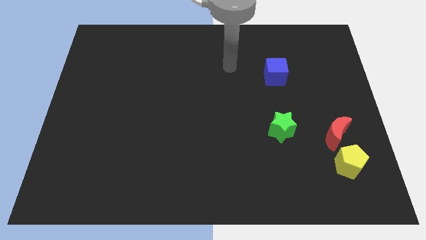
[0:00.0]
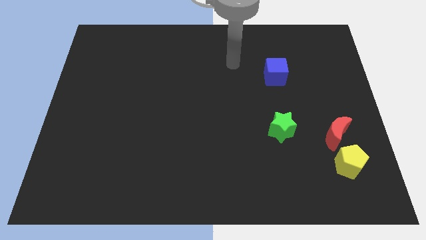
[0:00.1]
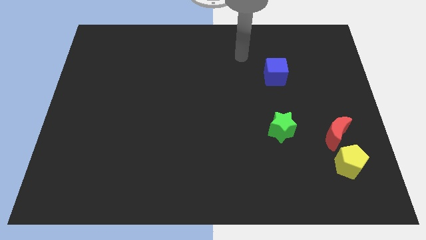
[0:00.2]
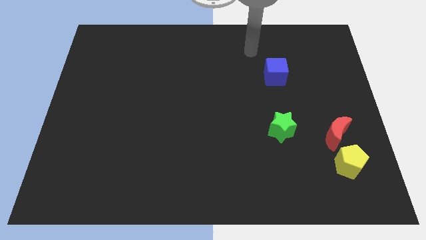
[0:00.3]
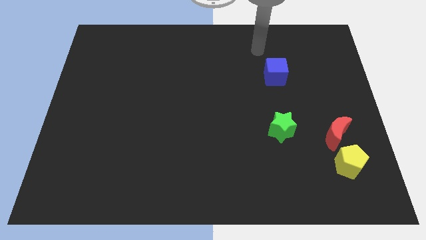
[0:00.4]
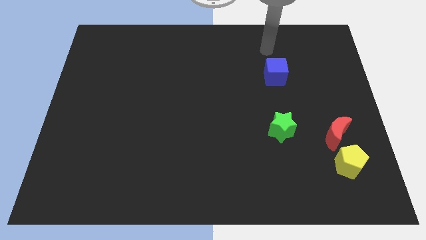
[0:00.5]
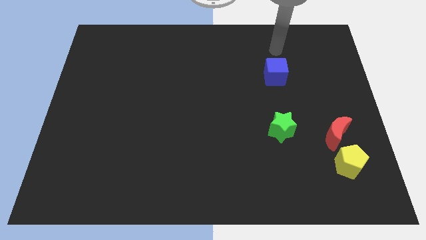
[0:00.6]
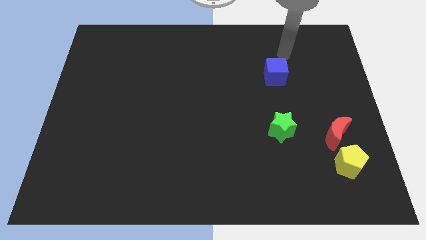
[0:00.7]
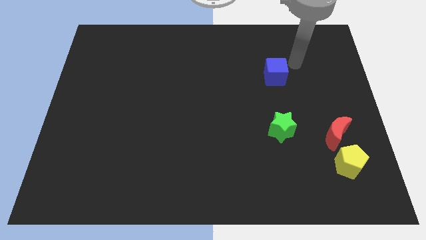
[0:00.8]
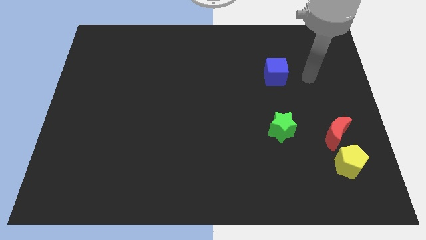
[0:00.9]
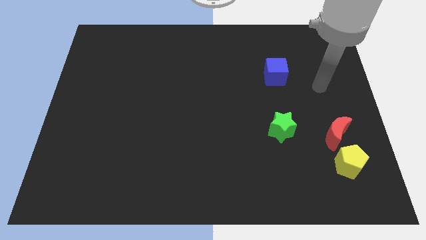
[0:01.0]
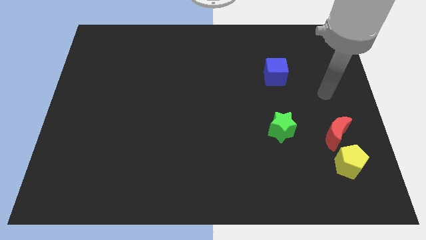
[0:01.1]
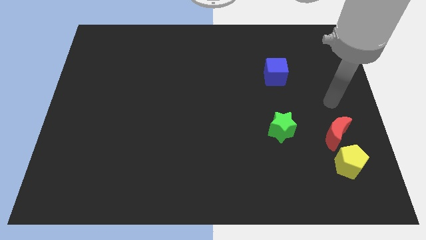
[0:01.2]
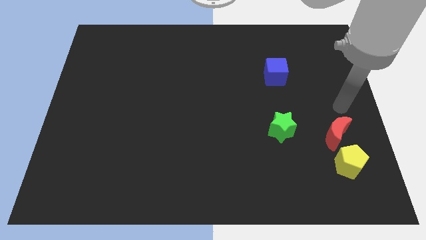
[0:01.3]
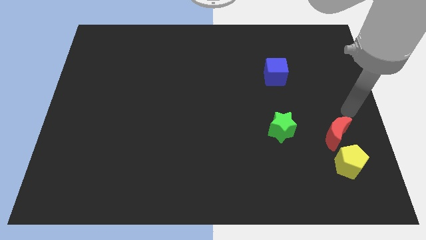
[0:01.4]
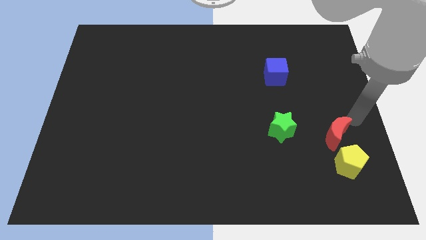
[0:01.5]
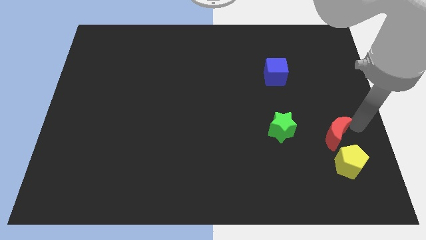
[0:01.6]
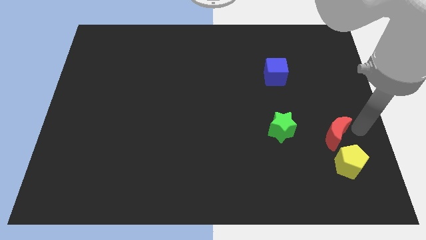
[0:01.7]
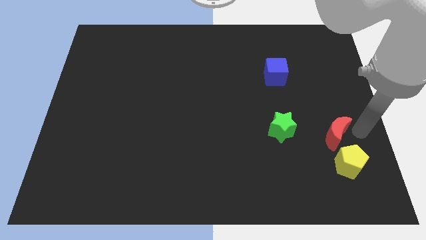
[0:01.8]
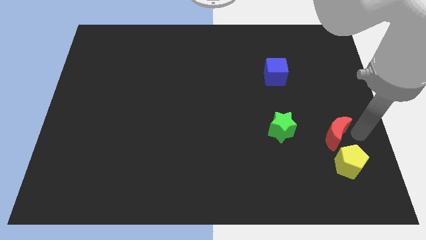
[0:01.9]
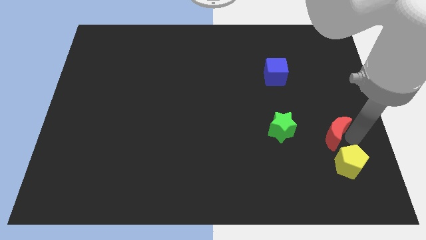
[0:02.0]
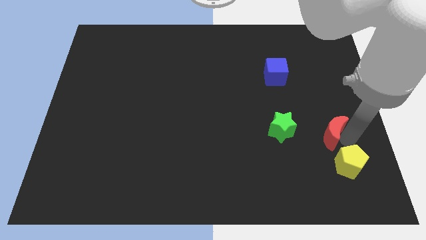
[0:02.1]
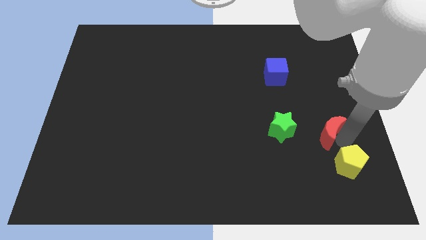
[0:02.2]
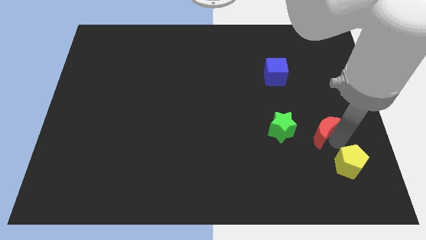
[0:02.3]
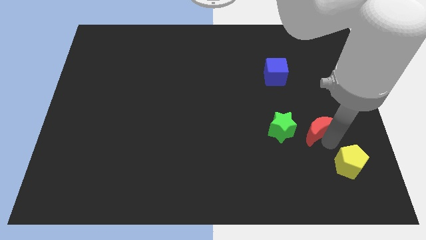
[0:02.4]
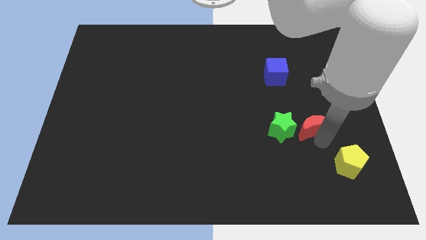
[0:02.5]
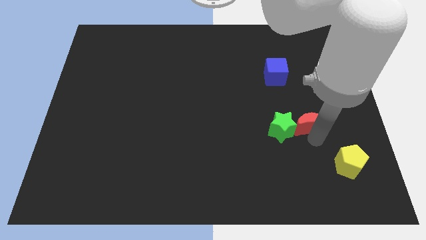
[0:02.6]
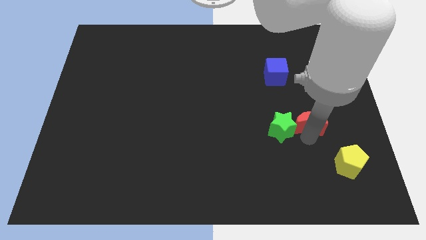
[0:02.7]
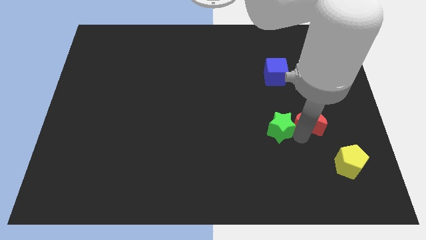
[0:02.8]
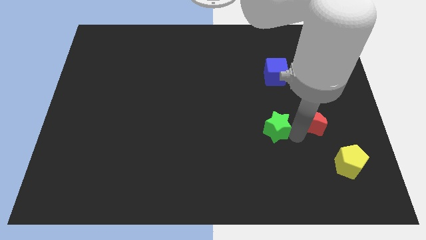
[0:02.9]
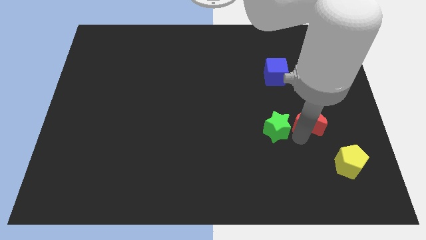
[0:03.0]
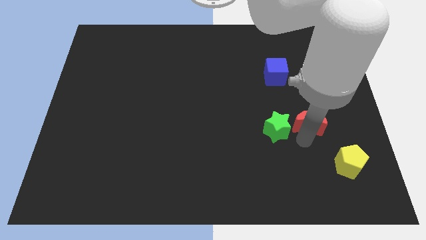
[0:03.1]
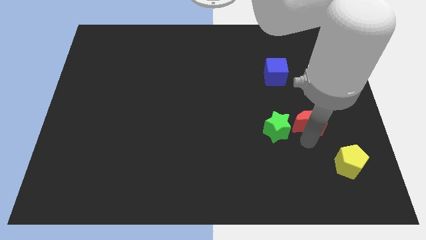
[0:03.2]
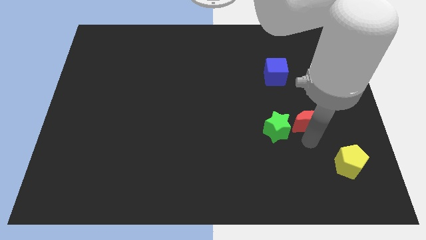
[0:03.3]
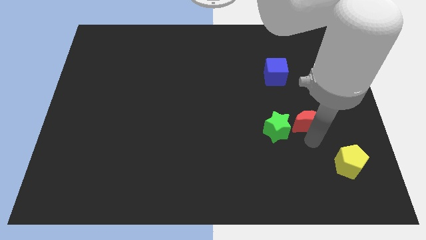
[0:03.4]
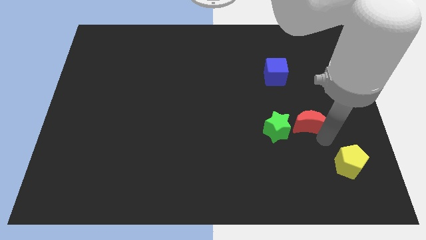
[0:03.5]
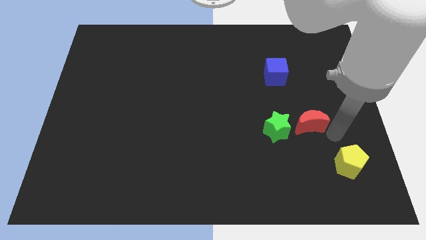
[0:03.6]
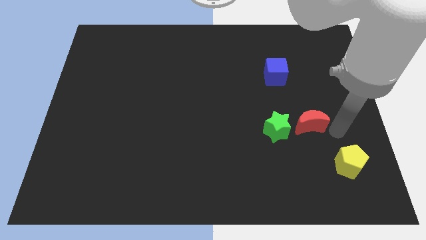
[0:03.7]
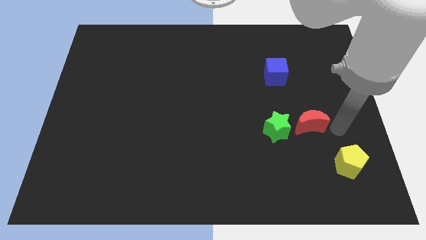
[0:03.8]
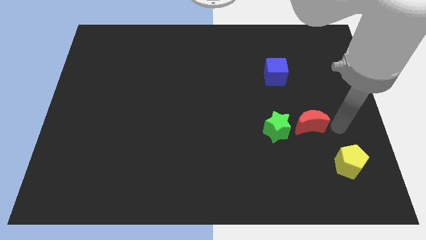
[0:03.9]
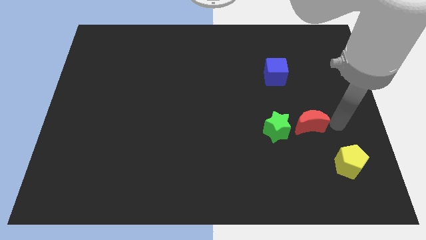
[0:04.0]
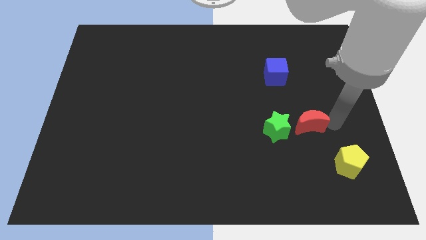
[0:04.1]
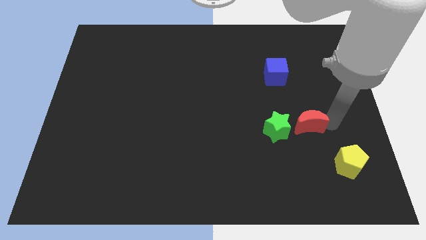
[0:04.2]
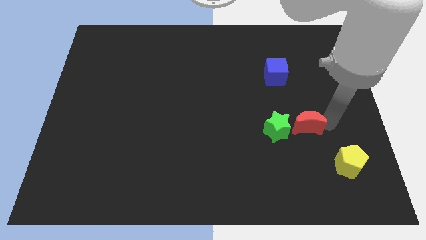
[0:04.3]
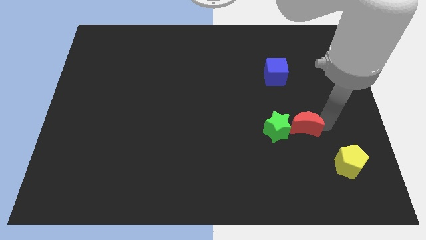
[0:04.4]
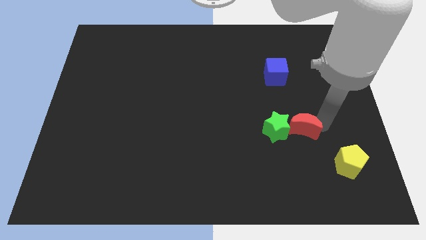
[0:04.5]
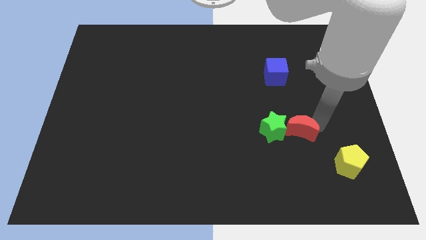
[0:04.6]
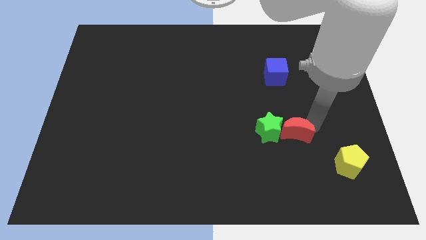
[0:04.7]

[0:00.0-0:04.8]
slide the red moon close to the green star

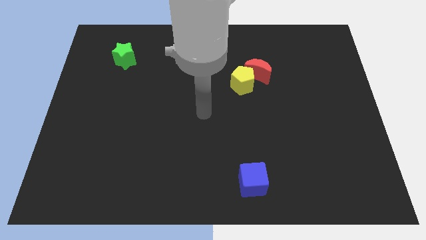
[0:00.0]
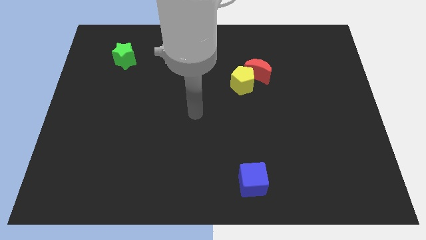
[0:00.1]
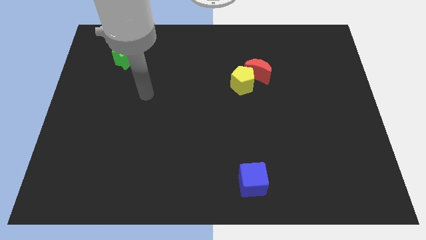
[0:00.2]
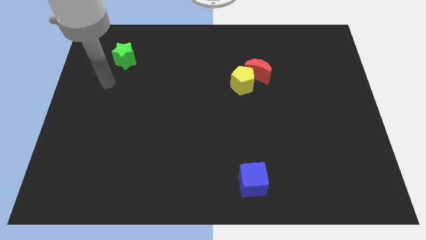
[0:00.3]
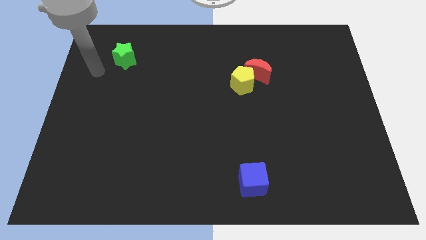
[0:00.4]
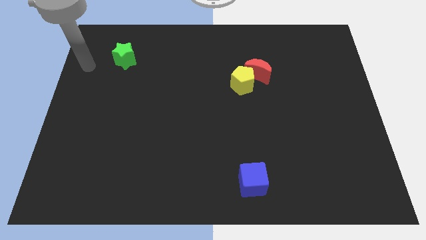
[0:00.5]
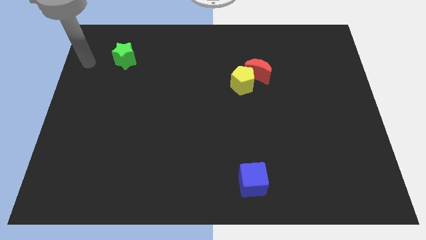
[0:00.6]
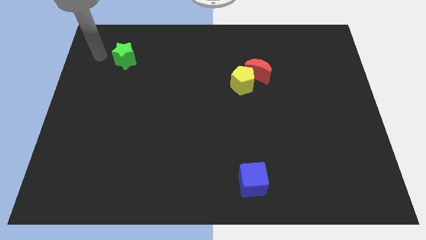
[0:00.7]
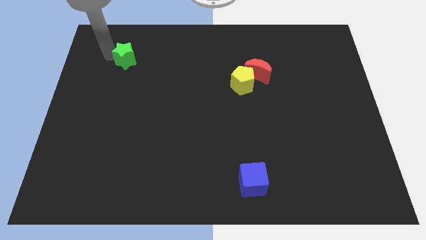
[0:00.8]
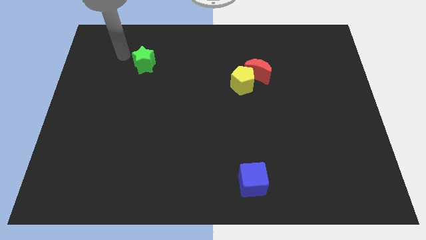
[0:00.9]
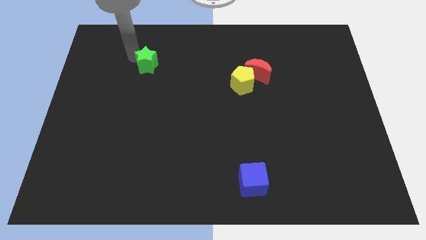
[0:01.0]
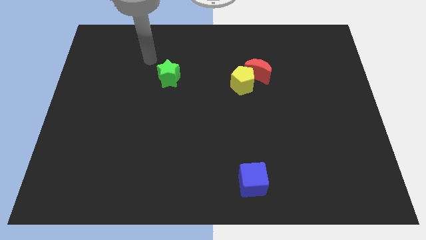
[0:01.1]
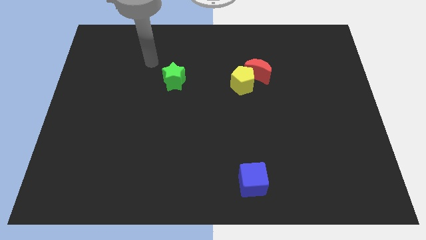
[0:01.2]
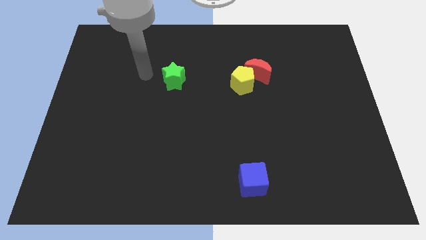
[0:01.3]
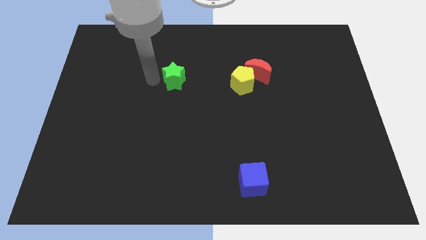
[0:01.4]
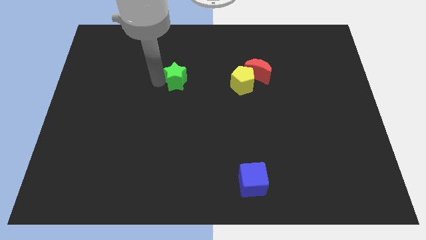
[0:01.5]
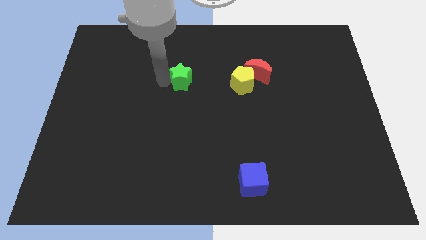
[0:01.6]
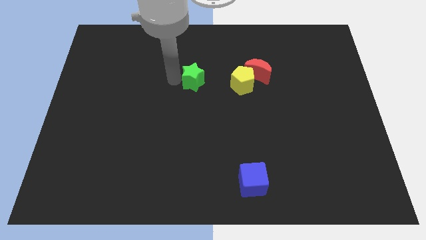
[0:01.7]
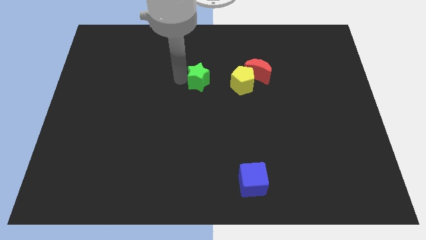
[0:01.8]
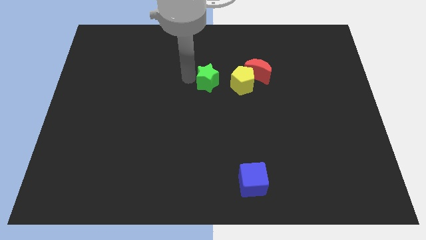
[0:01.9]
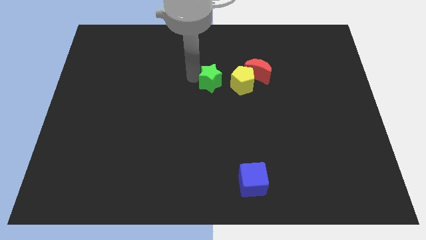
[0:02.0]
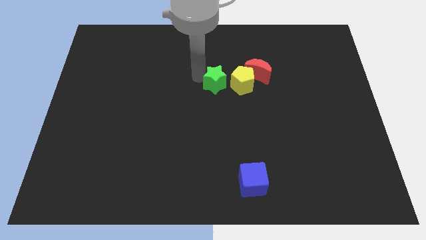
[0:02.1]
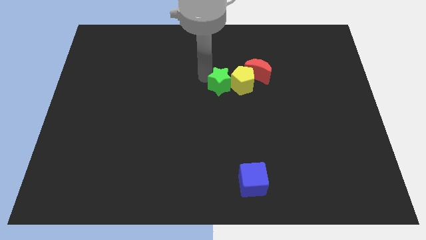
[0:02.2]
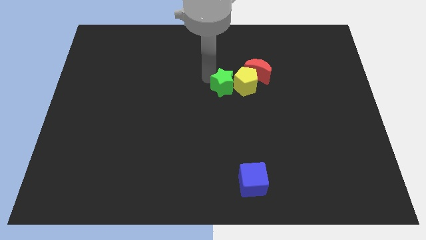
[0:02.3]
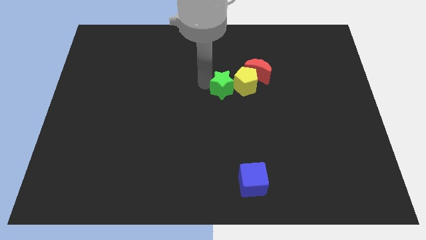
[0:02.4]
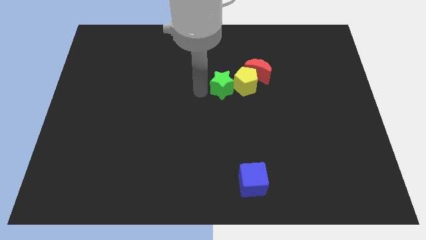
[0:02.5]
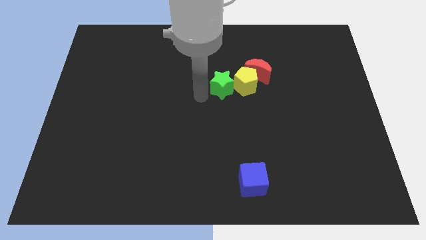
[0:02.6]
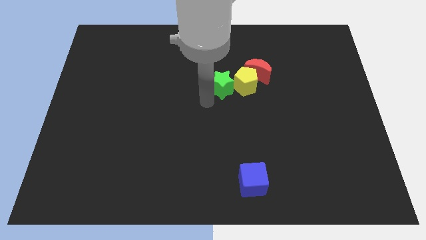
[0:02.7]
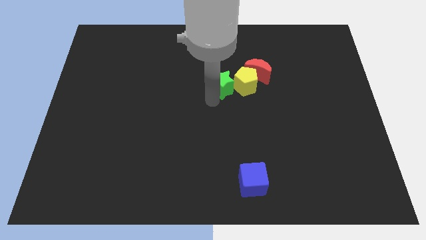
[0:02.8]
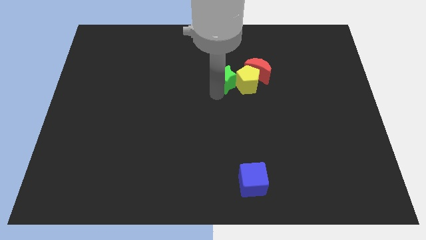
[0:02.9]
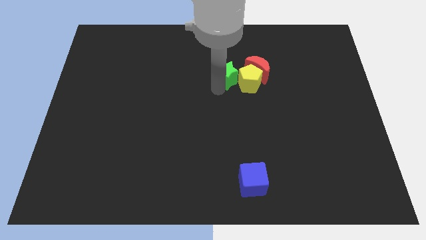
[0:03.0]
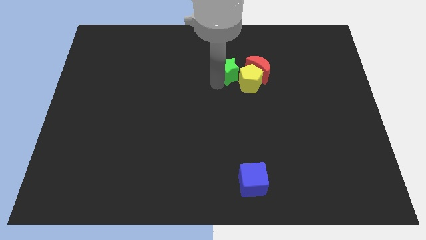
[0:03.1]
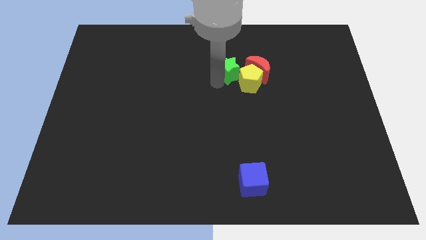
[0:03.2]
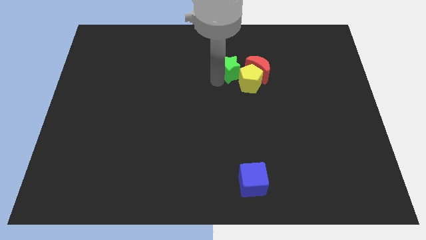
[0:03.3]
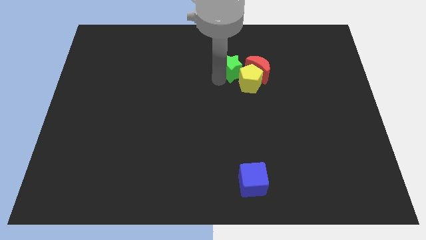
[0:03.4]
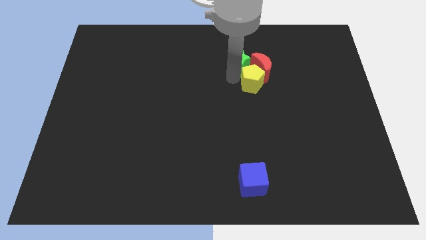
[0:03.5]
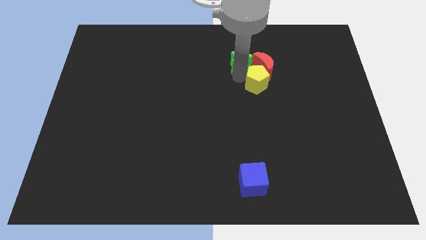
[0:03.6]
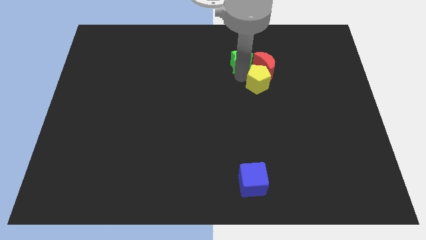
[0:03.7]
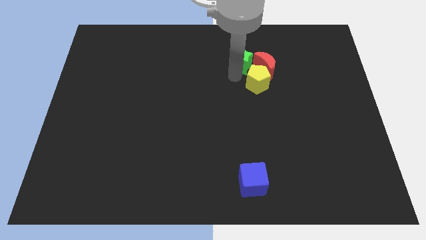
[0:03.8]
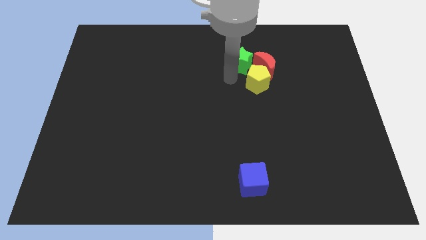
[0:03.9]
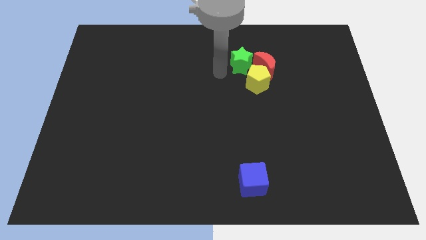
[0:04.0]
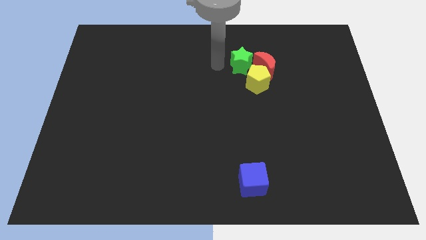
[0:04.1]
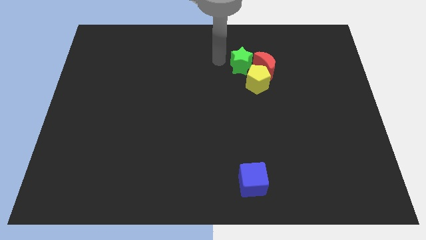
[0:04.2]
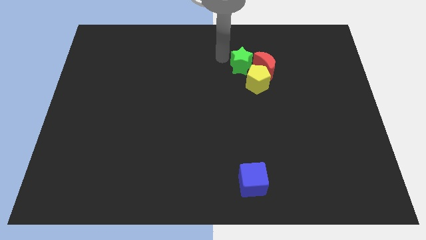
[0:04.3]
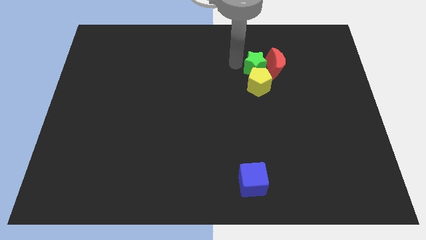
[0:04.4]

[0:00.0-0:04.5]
slide the green star towards the moon
